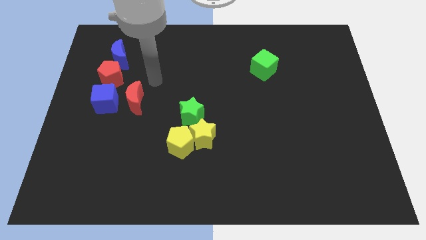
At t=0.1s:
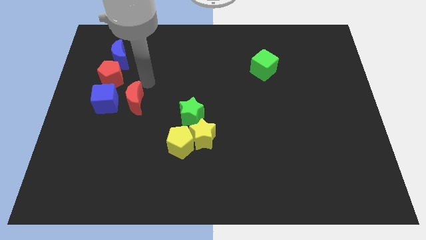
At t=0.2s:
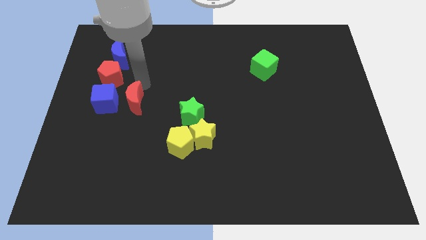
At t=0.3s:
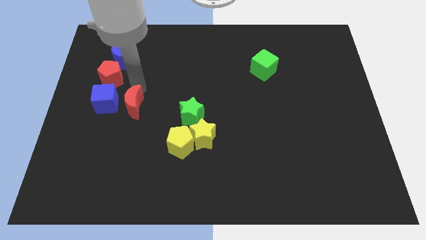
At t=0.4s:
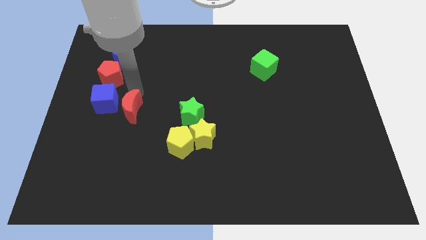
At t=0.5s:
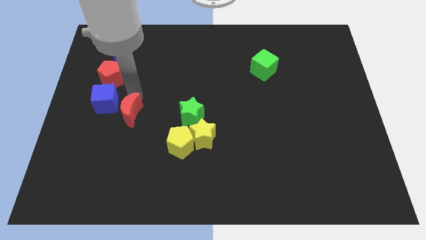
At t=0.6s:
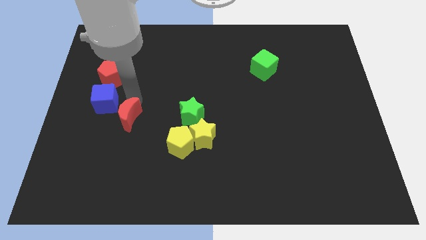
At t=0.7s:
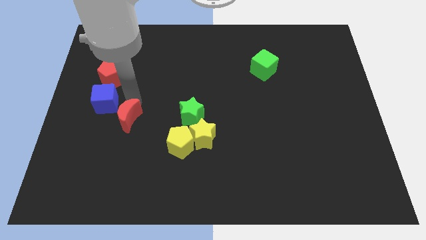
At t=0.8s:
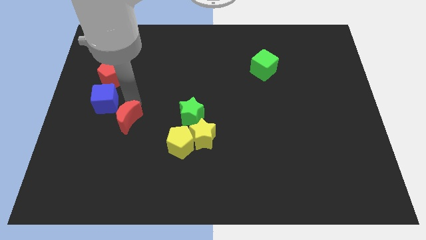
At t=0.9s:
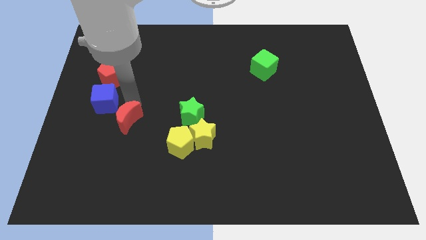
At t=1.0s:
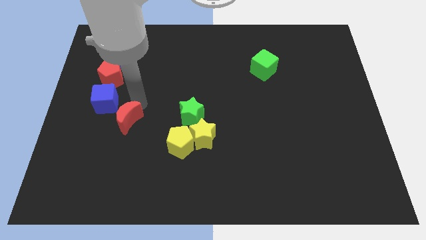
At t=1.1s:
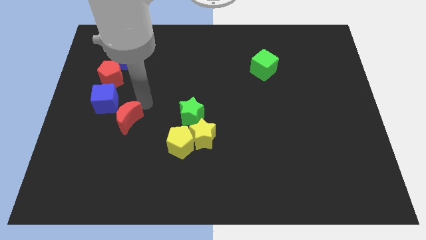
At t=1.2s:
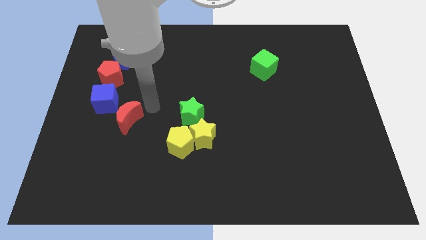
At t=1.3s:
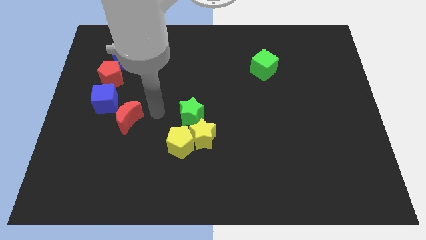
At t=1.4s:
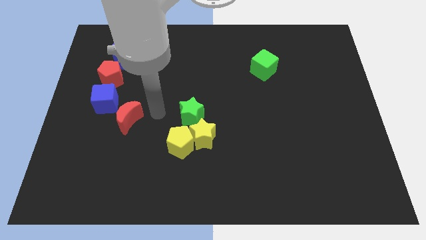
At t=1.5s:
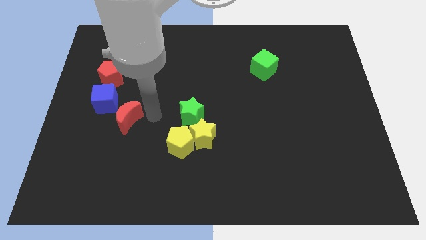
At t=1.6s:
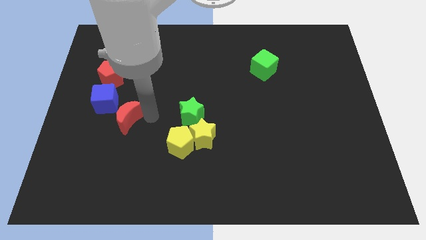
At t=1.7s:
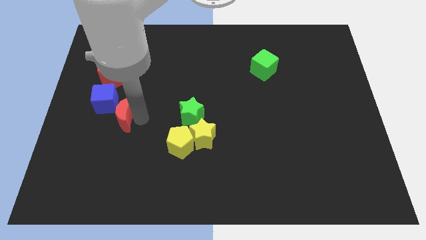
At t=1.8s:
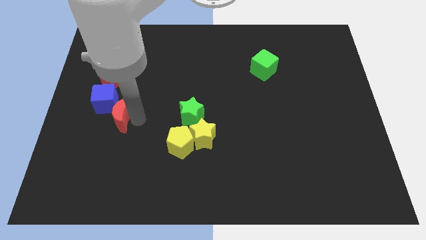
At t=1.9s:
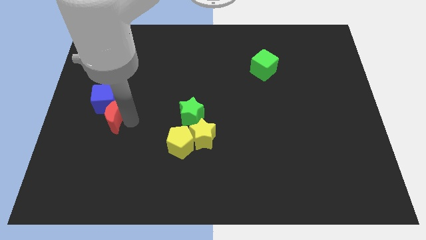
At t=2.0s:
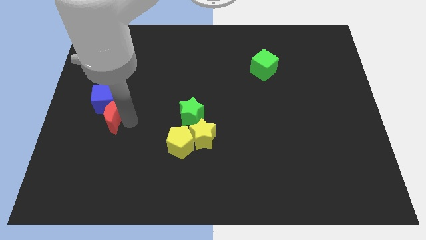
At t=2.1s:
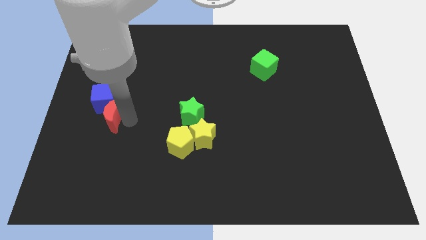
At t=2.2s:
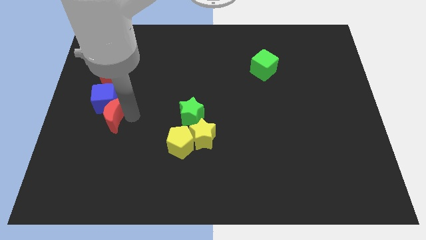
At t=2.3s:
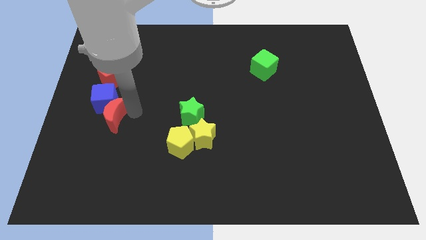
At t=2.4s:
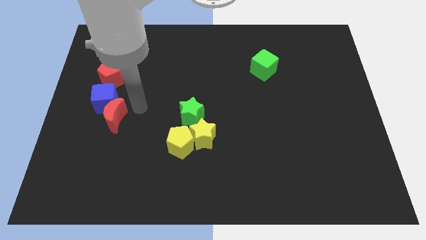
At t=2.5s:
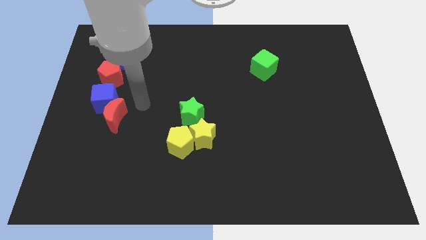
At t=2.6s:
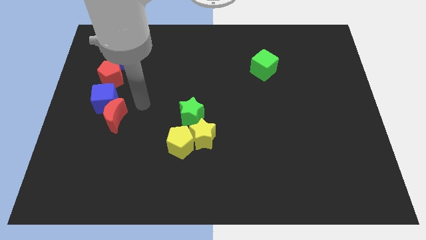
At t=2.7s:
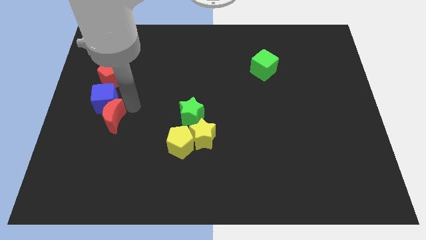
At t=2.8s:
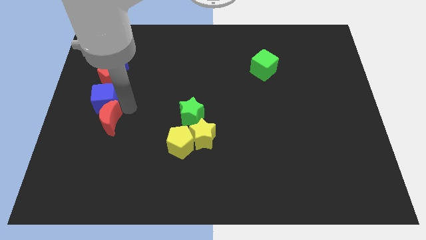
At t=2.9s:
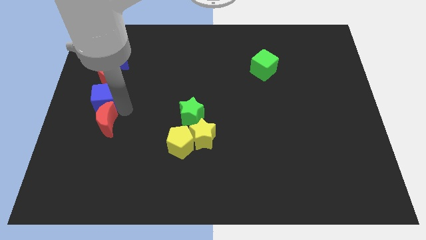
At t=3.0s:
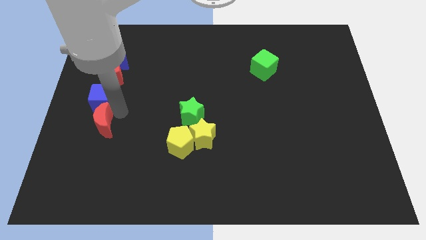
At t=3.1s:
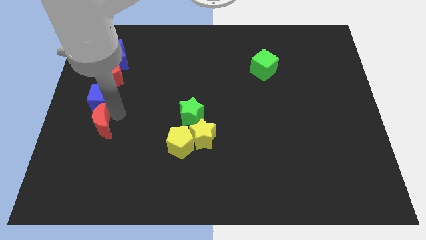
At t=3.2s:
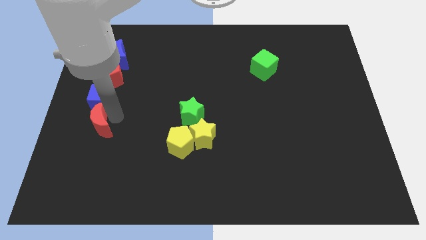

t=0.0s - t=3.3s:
place red crescent below blue cube

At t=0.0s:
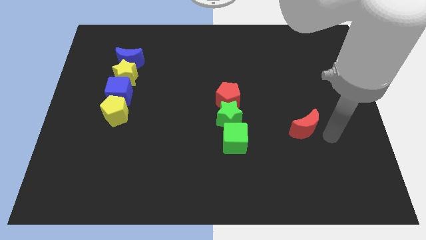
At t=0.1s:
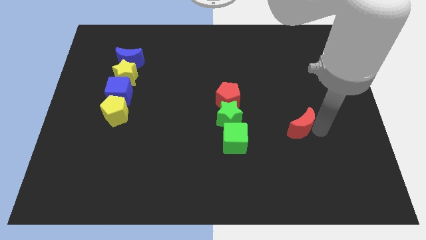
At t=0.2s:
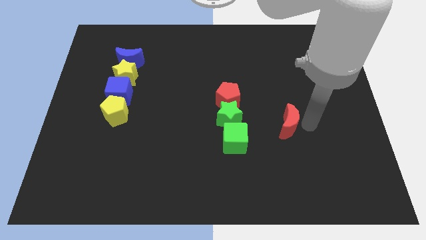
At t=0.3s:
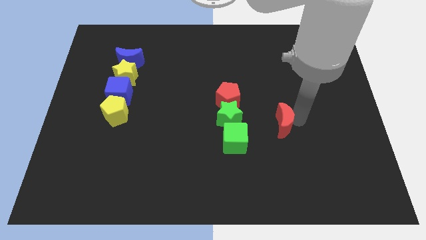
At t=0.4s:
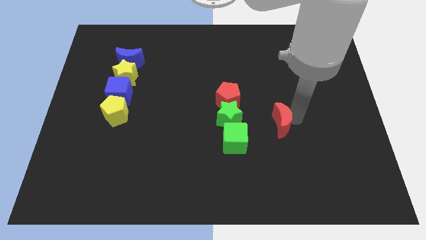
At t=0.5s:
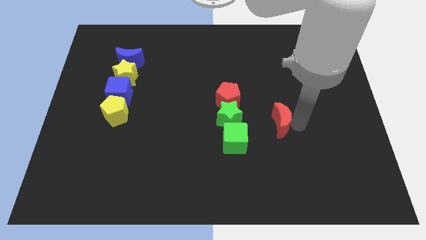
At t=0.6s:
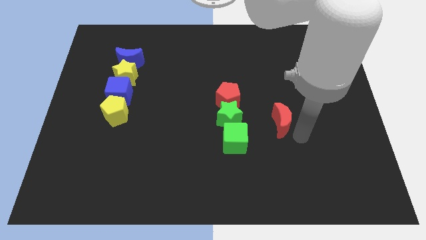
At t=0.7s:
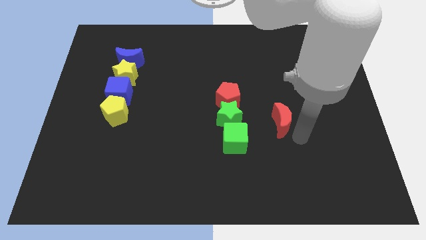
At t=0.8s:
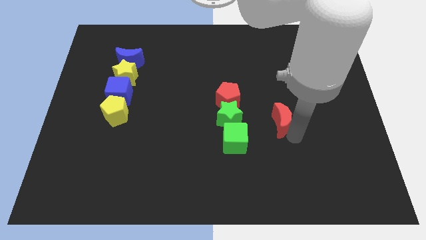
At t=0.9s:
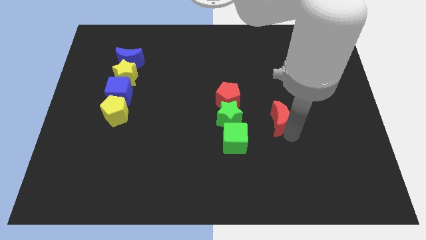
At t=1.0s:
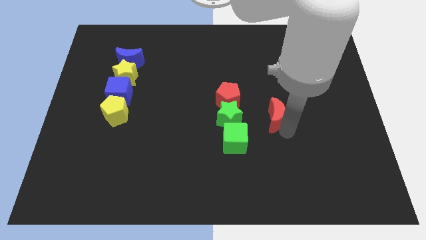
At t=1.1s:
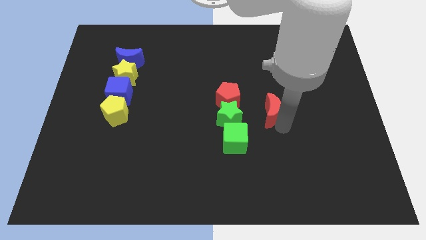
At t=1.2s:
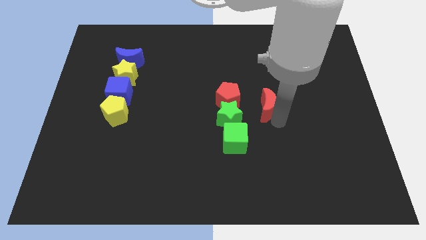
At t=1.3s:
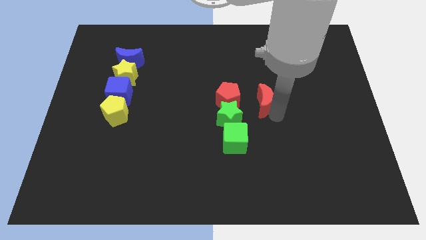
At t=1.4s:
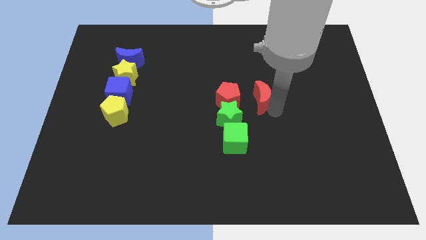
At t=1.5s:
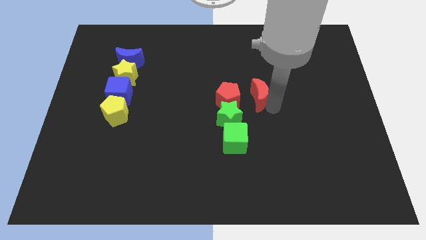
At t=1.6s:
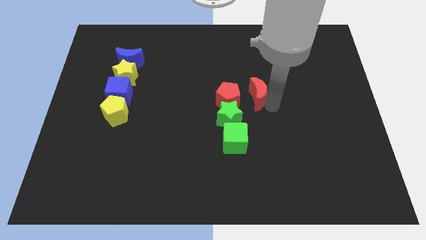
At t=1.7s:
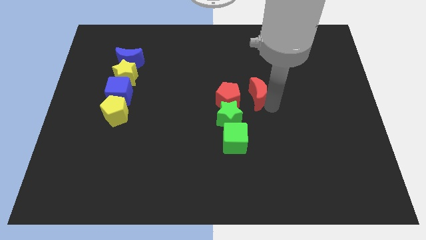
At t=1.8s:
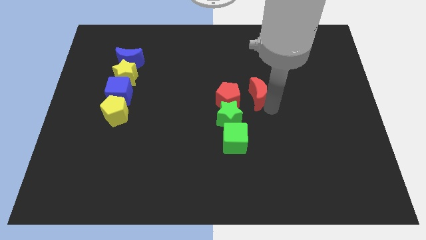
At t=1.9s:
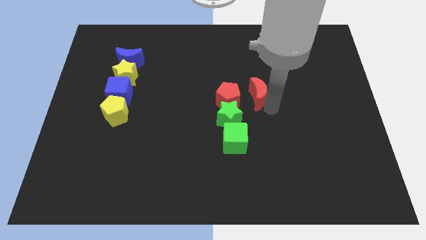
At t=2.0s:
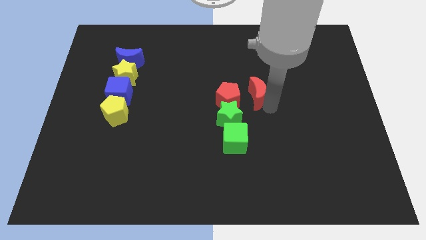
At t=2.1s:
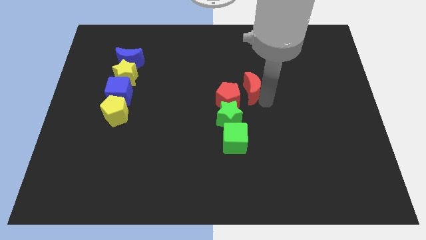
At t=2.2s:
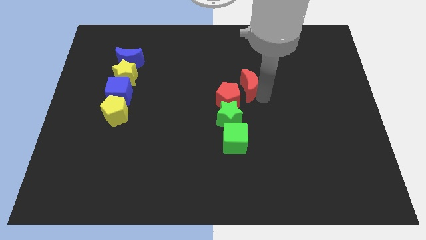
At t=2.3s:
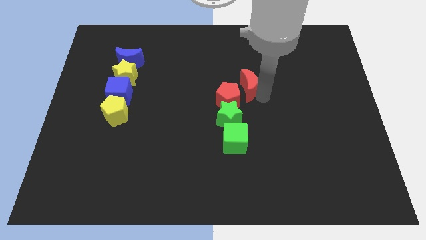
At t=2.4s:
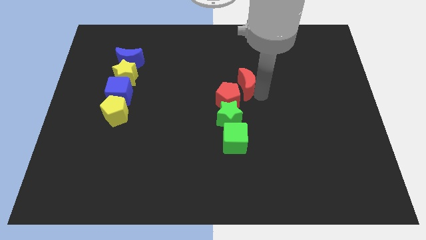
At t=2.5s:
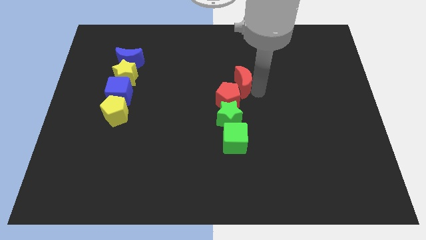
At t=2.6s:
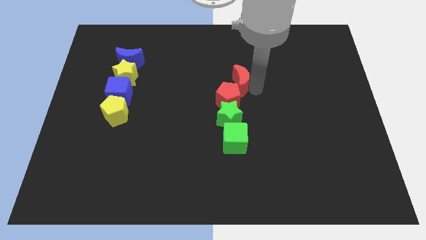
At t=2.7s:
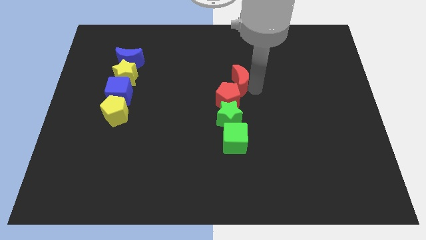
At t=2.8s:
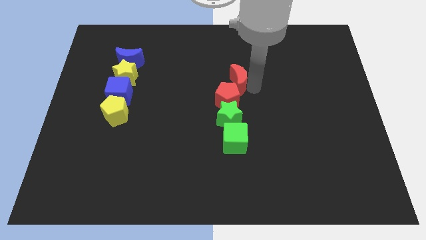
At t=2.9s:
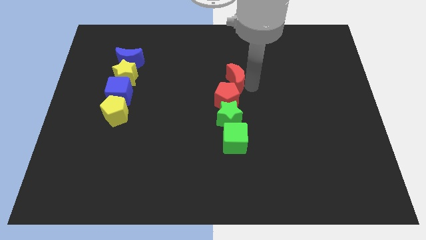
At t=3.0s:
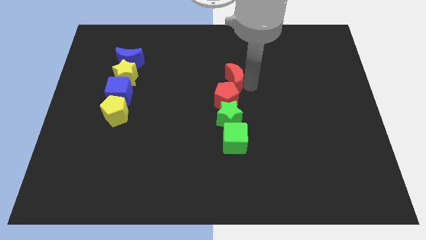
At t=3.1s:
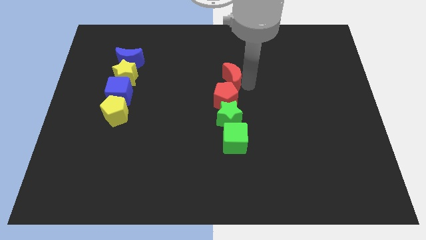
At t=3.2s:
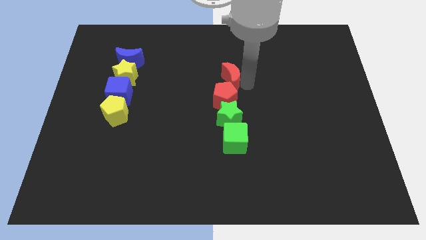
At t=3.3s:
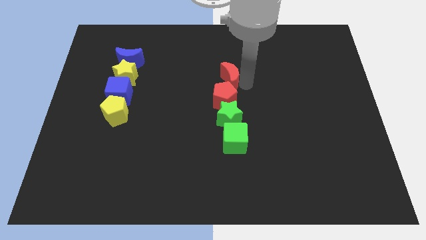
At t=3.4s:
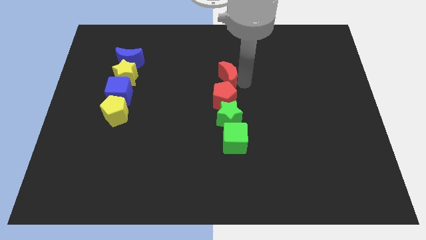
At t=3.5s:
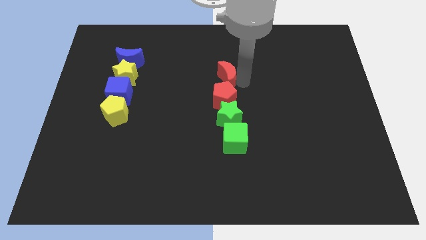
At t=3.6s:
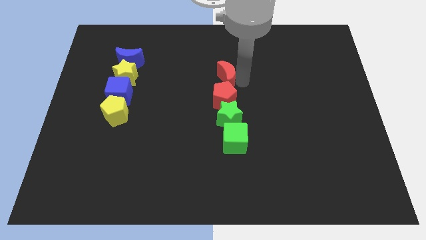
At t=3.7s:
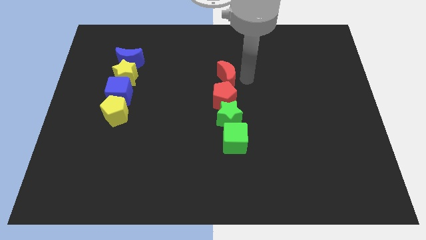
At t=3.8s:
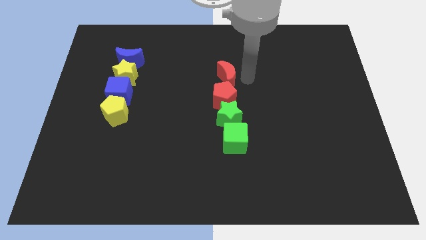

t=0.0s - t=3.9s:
push the red crescent to the top of red pentagon

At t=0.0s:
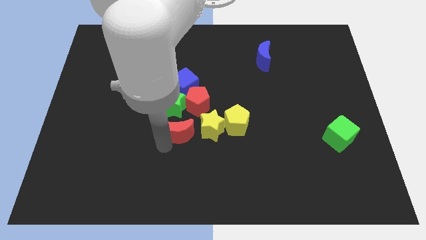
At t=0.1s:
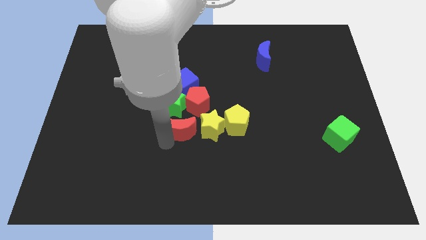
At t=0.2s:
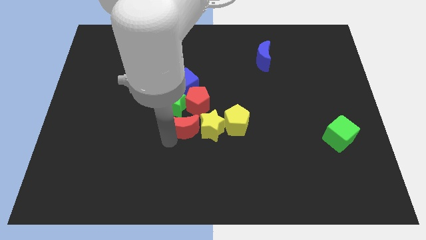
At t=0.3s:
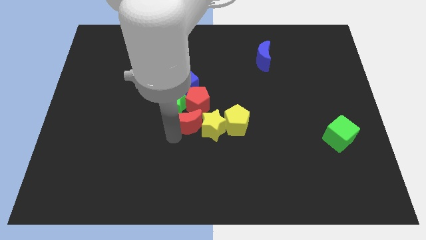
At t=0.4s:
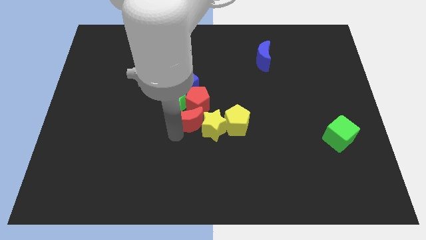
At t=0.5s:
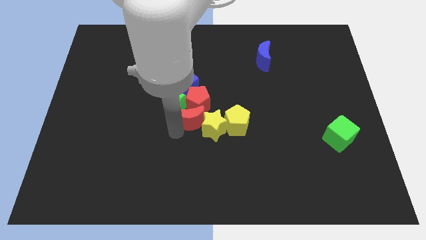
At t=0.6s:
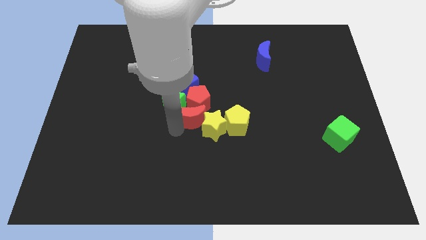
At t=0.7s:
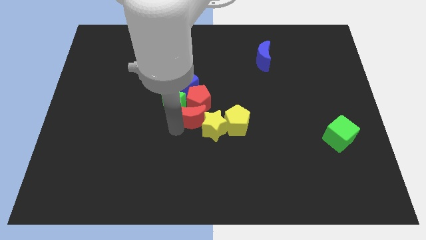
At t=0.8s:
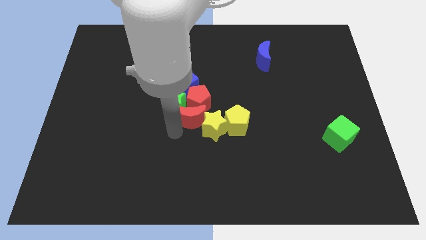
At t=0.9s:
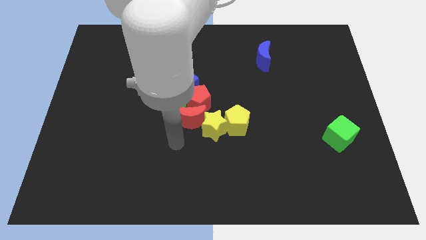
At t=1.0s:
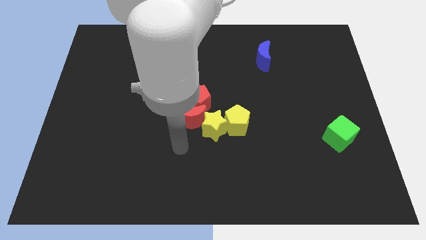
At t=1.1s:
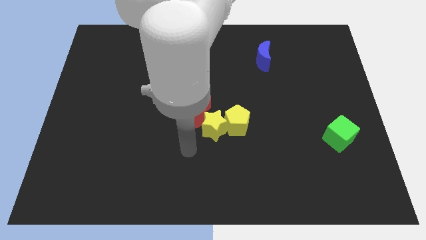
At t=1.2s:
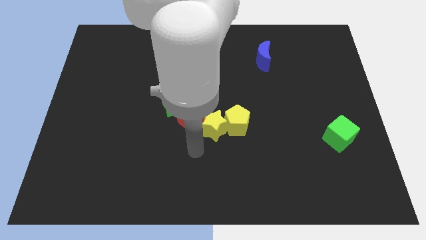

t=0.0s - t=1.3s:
move red moon into the red pentagon

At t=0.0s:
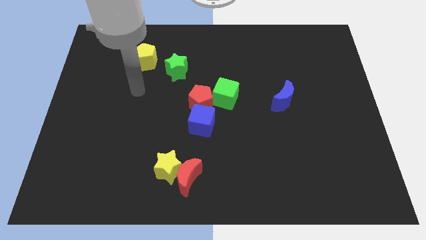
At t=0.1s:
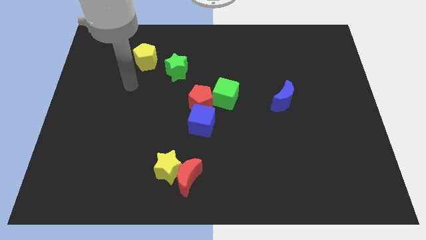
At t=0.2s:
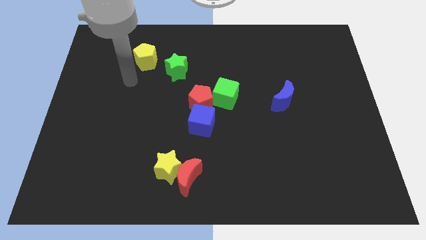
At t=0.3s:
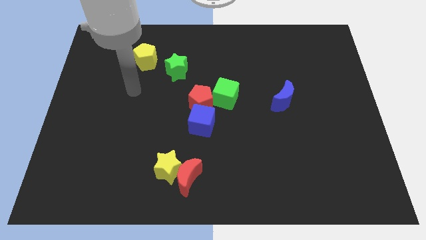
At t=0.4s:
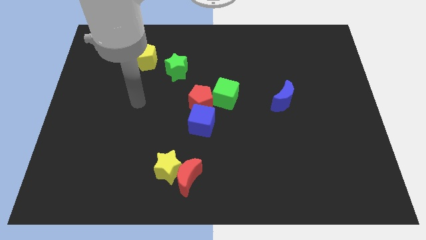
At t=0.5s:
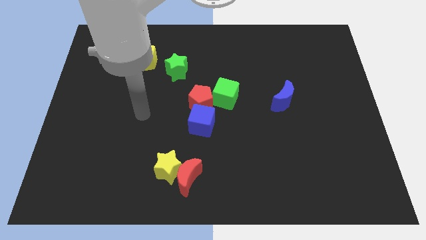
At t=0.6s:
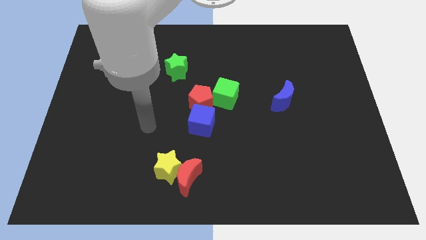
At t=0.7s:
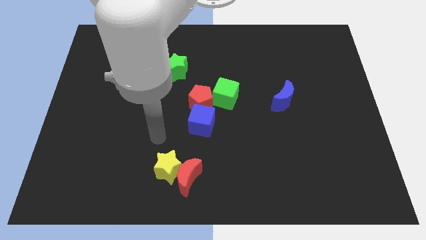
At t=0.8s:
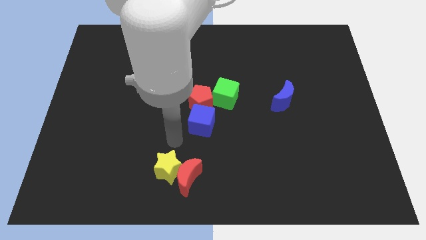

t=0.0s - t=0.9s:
move your arm above the yellow star
